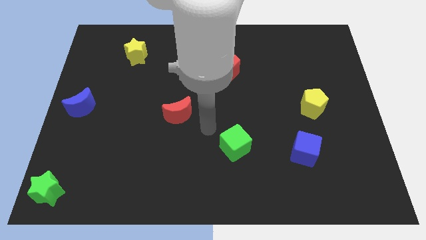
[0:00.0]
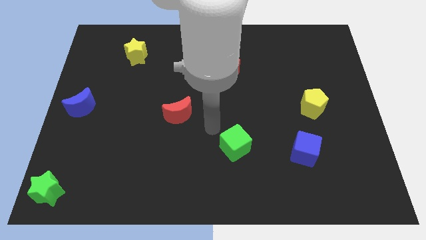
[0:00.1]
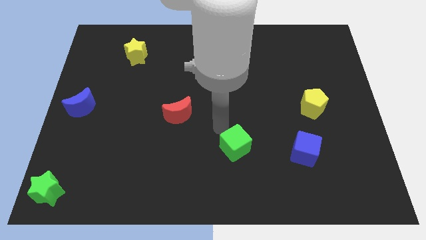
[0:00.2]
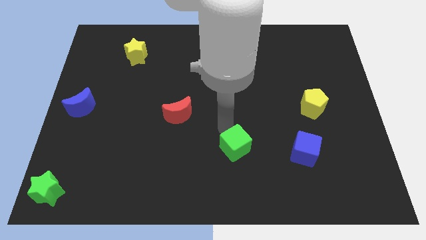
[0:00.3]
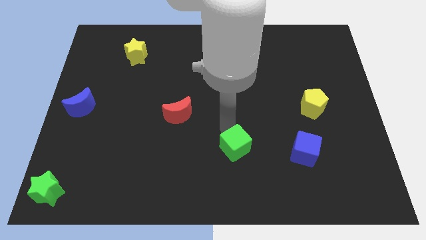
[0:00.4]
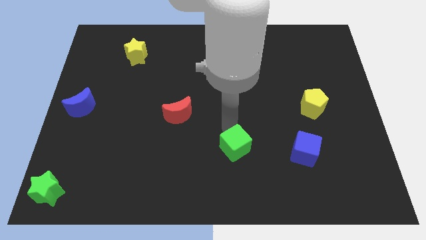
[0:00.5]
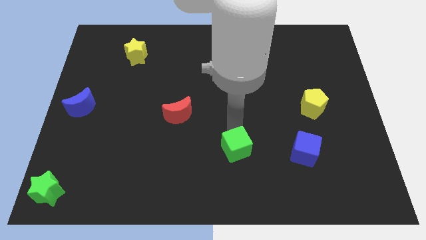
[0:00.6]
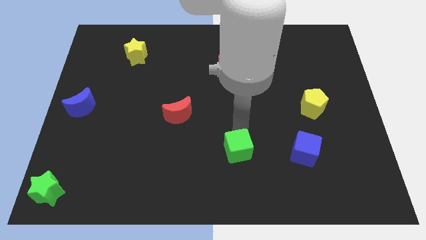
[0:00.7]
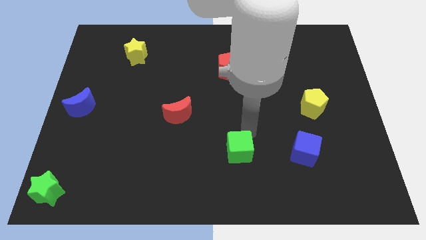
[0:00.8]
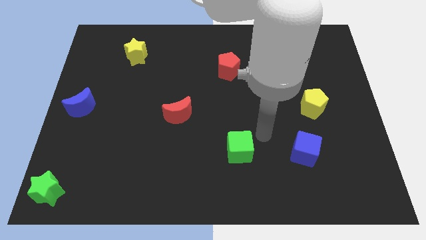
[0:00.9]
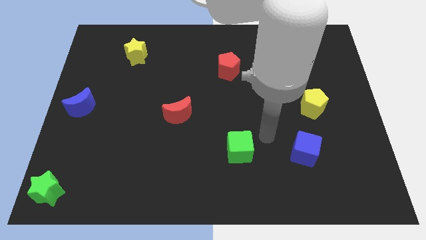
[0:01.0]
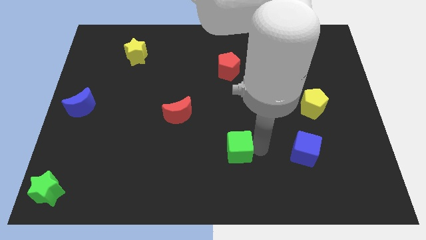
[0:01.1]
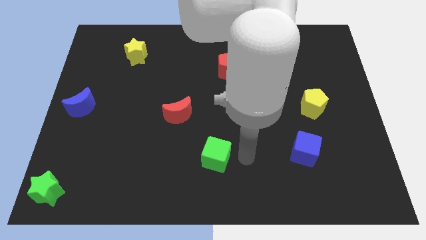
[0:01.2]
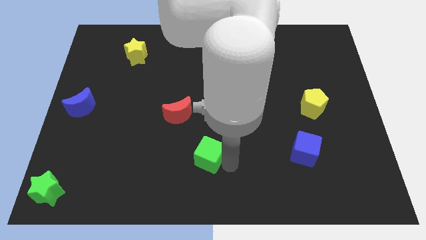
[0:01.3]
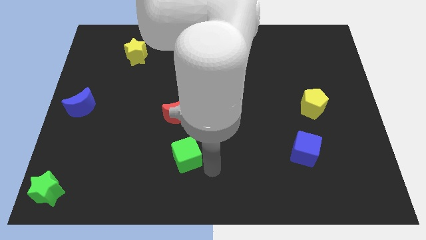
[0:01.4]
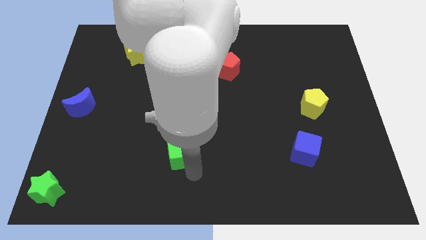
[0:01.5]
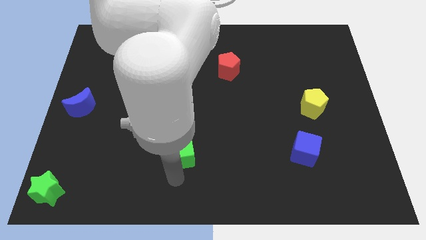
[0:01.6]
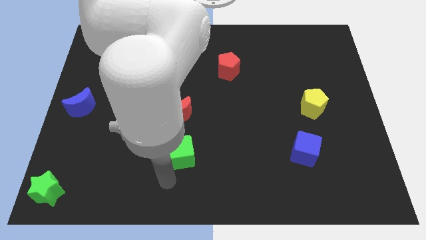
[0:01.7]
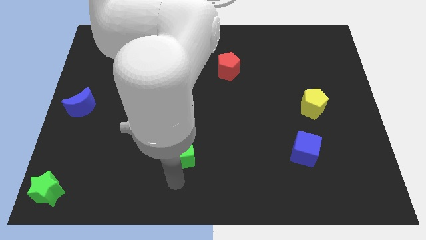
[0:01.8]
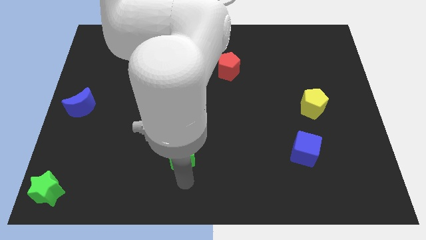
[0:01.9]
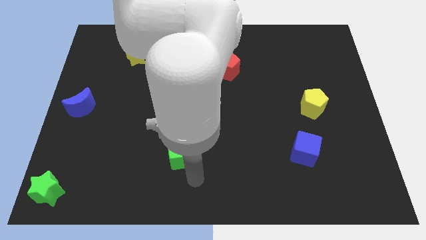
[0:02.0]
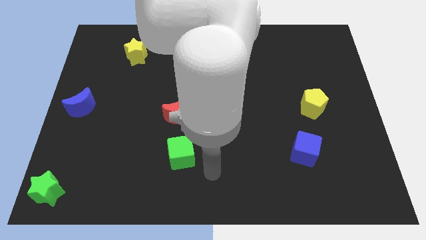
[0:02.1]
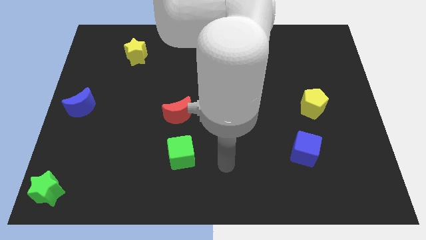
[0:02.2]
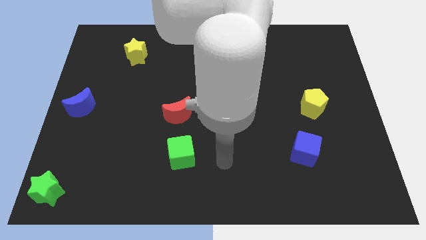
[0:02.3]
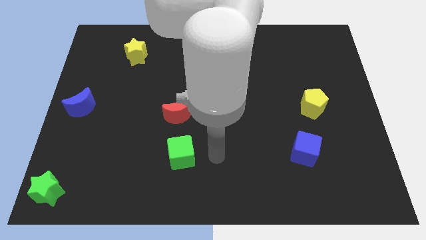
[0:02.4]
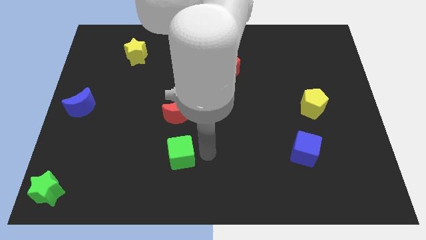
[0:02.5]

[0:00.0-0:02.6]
move the green cube below the red moon

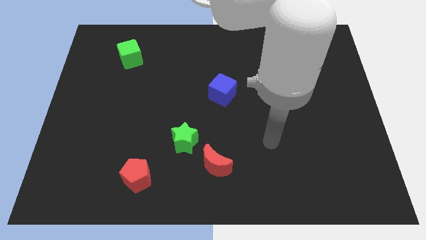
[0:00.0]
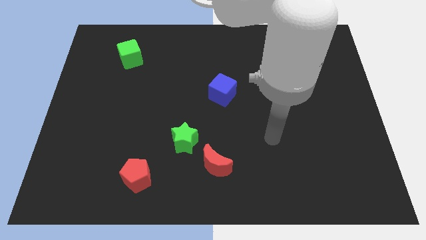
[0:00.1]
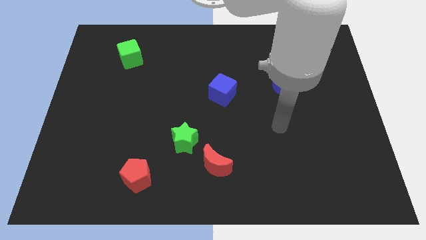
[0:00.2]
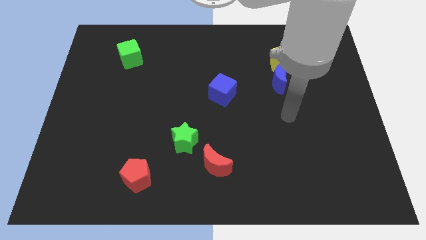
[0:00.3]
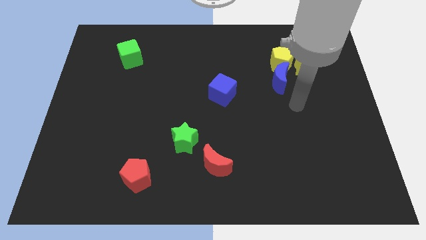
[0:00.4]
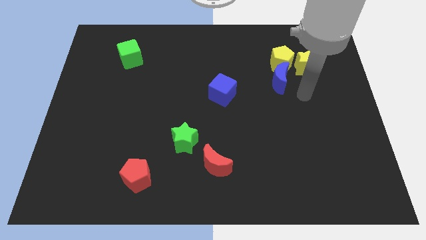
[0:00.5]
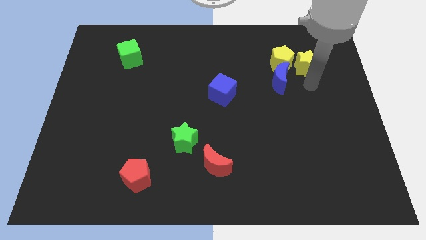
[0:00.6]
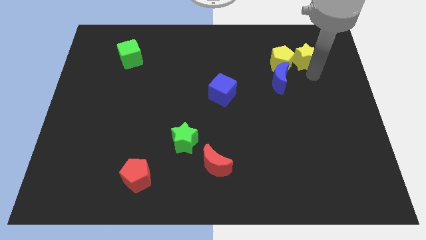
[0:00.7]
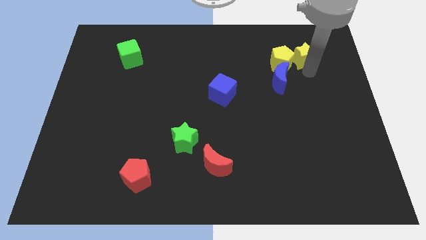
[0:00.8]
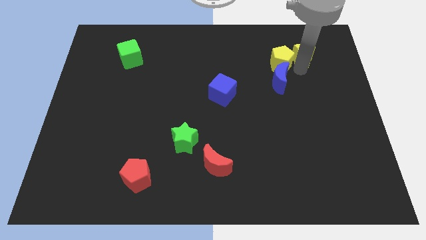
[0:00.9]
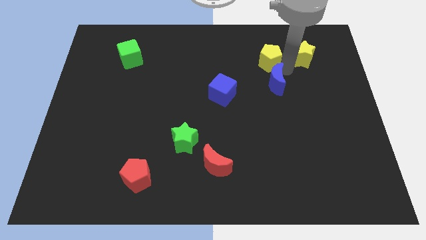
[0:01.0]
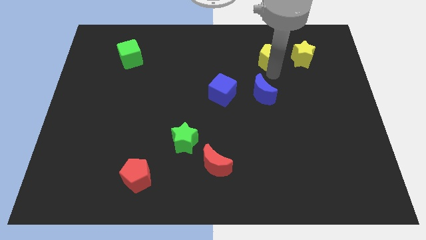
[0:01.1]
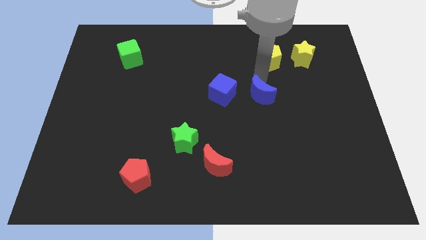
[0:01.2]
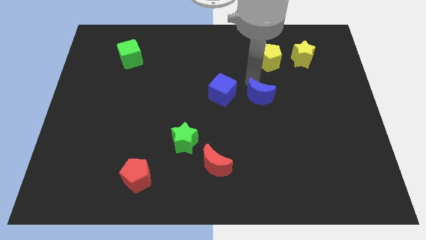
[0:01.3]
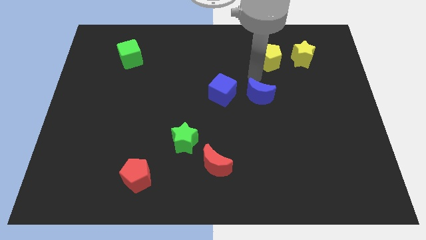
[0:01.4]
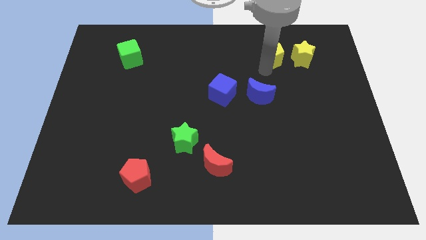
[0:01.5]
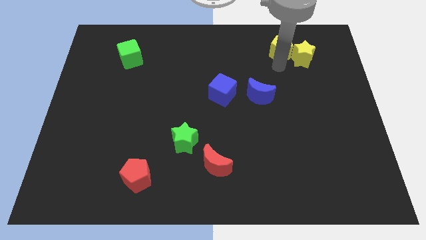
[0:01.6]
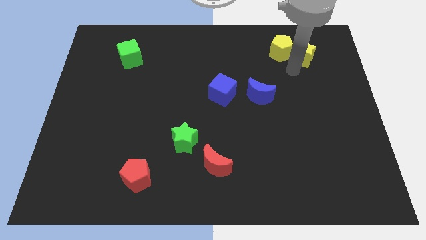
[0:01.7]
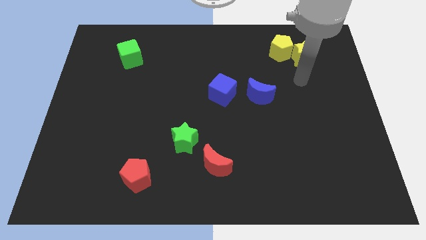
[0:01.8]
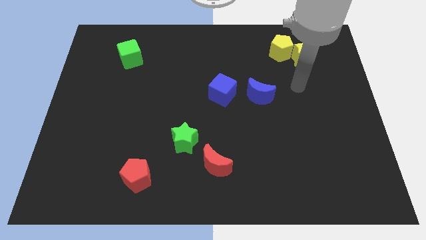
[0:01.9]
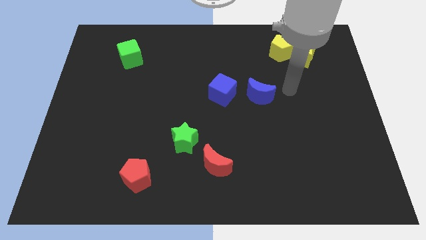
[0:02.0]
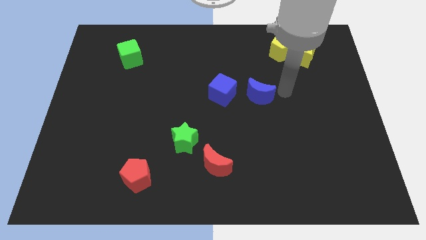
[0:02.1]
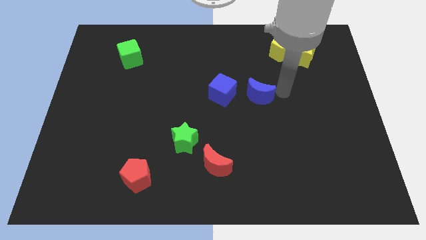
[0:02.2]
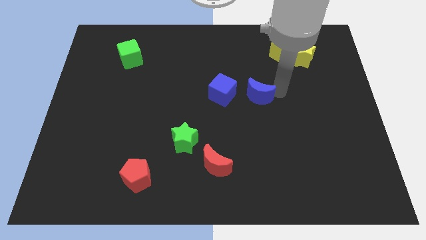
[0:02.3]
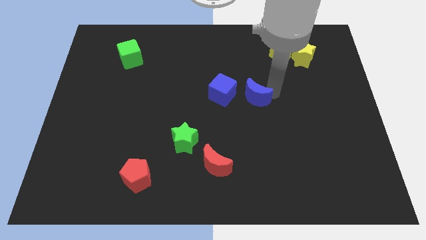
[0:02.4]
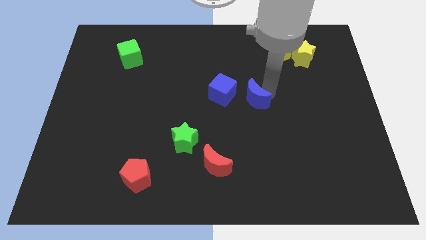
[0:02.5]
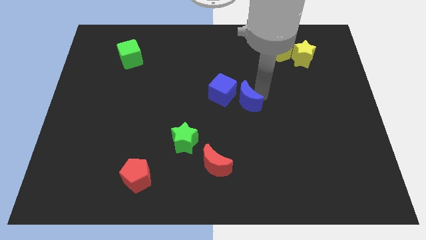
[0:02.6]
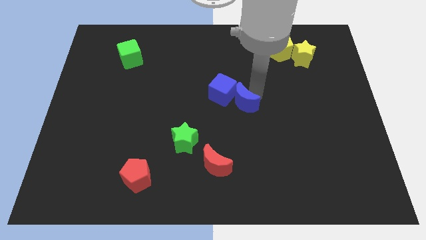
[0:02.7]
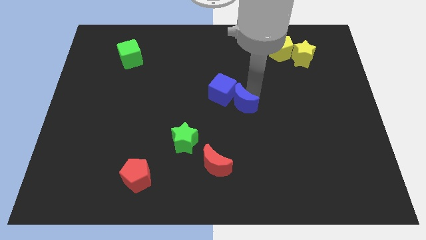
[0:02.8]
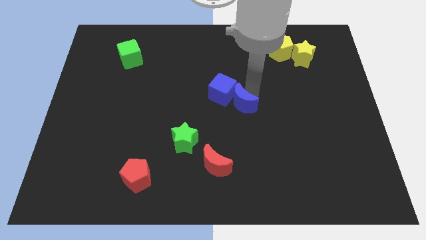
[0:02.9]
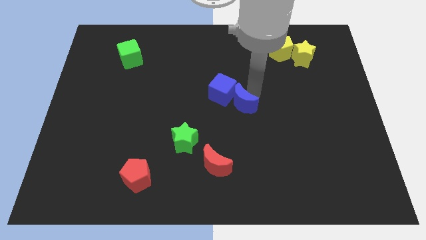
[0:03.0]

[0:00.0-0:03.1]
push the blue crescent towards the blue cube

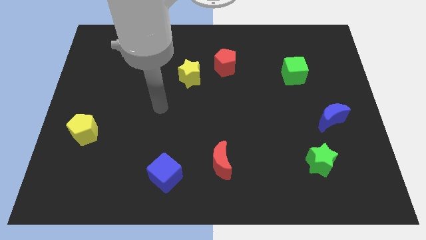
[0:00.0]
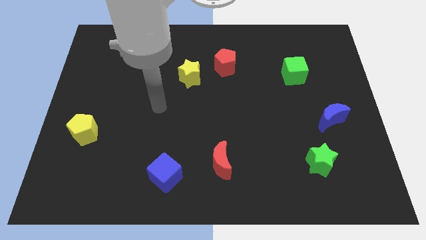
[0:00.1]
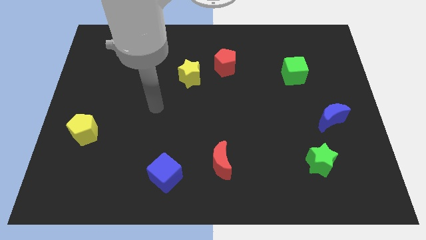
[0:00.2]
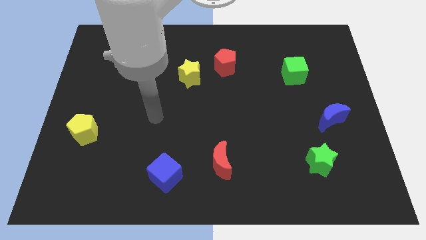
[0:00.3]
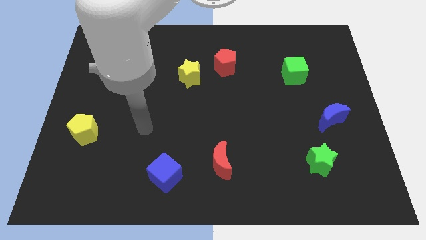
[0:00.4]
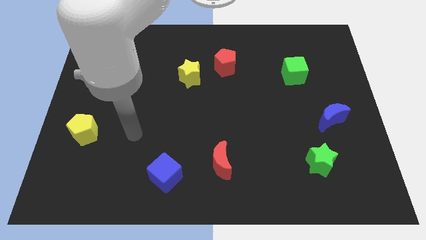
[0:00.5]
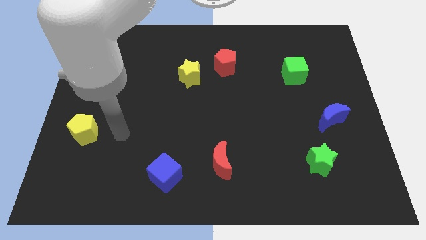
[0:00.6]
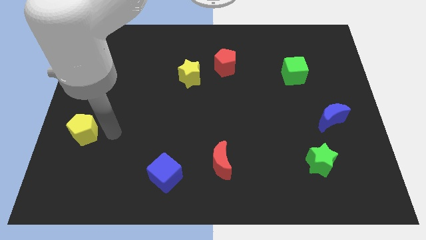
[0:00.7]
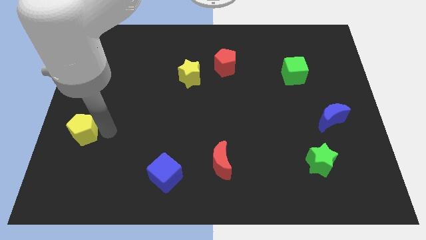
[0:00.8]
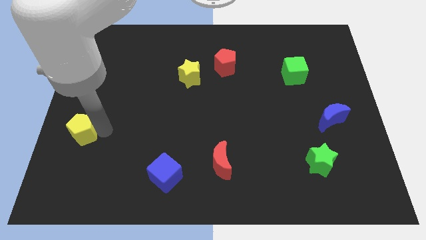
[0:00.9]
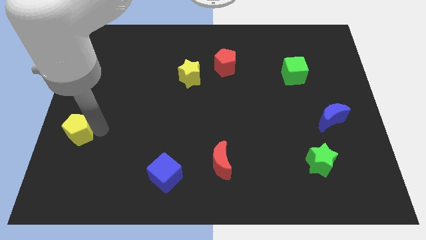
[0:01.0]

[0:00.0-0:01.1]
tap the right side of the yellow pentagon

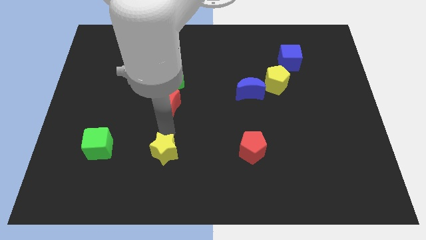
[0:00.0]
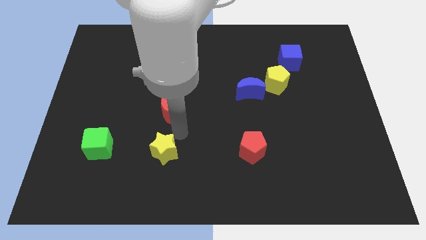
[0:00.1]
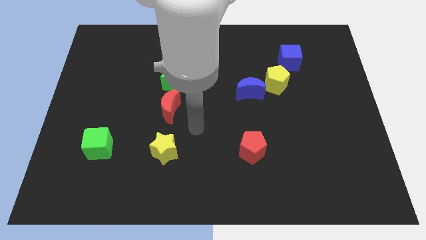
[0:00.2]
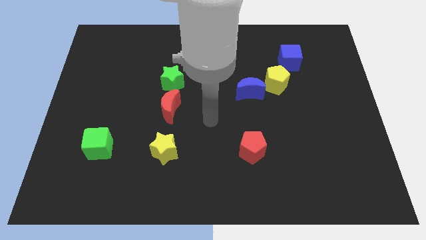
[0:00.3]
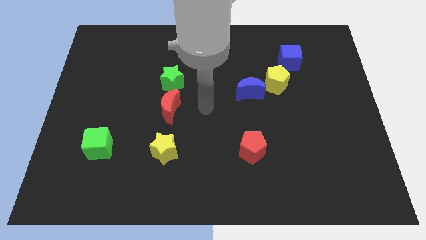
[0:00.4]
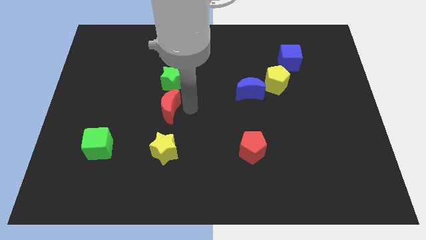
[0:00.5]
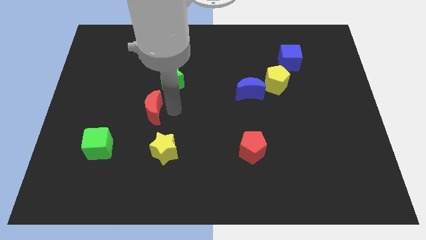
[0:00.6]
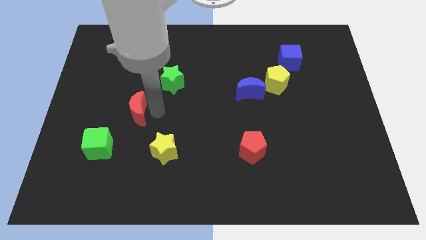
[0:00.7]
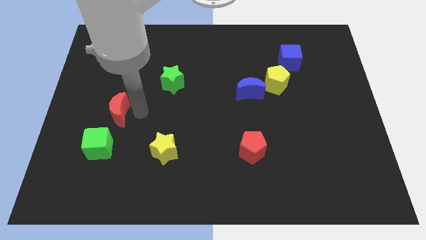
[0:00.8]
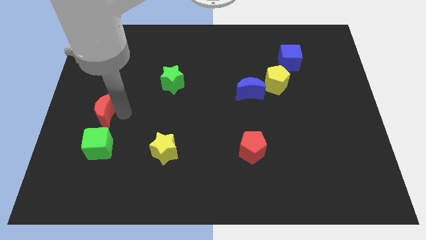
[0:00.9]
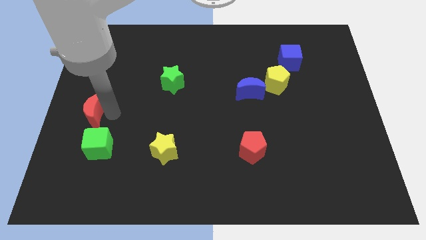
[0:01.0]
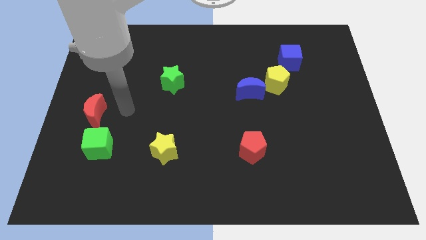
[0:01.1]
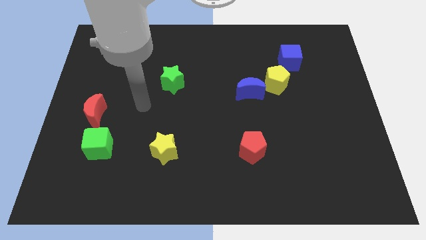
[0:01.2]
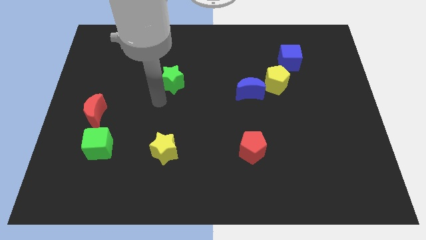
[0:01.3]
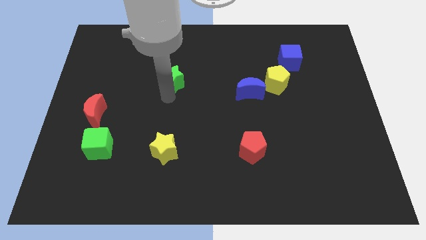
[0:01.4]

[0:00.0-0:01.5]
push the red moon to the top of the green cube

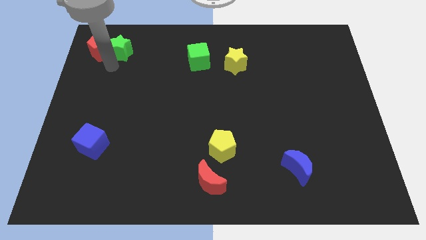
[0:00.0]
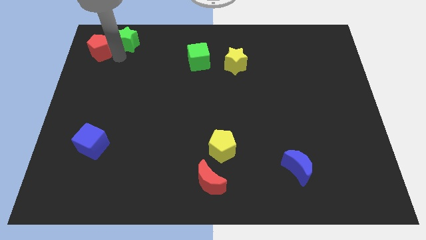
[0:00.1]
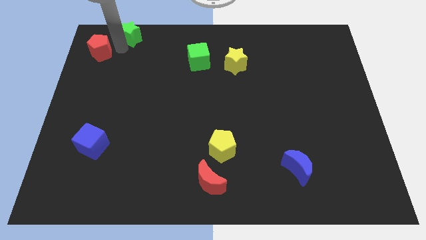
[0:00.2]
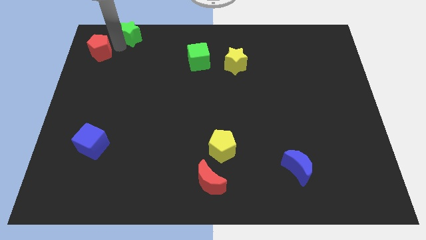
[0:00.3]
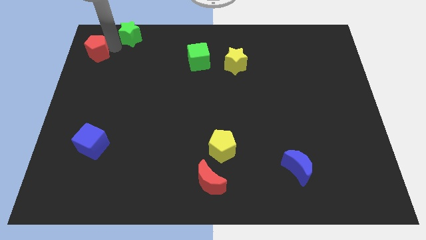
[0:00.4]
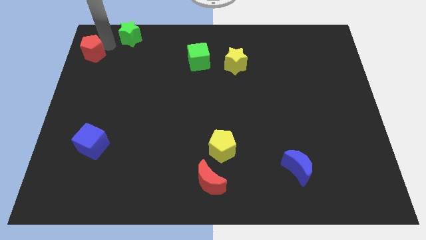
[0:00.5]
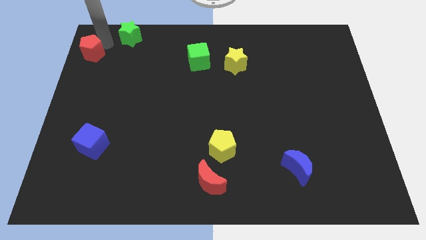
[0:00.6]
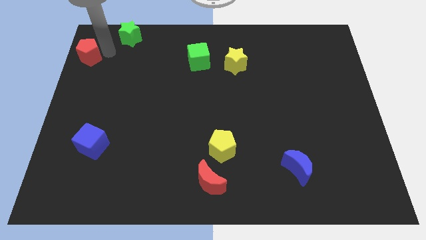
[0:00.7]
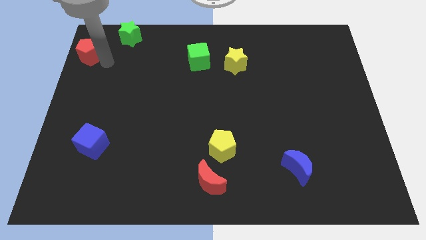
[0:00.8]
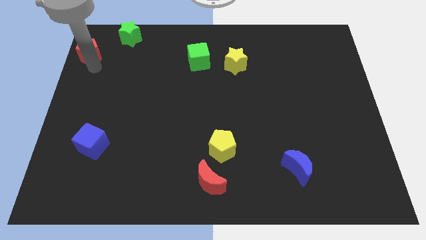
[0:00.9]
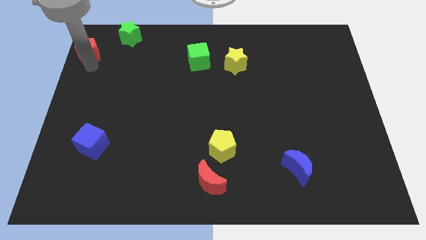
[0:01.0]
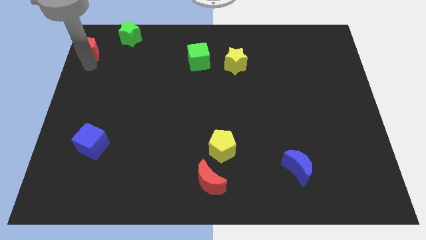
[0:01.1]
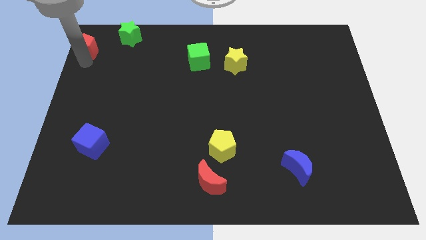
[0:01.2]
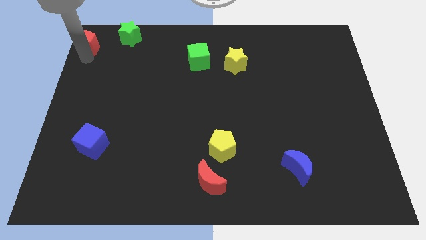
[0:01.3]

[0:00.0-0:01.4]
separate the red pentagon and the green star
